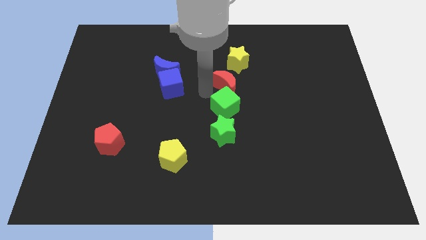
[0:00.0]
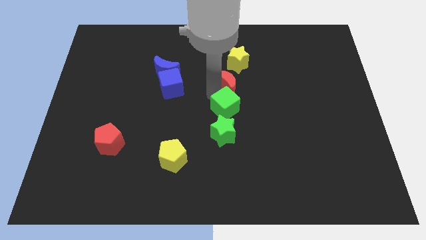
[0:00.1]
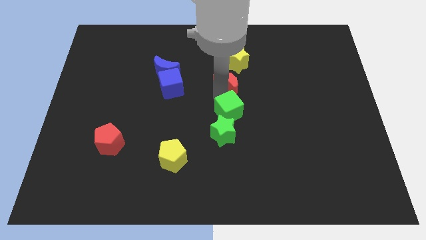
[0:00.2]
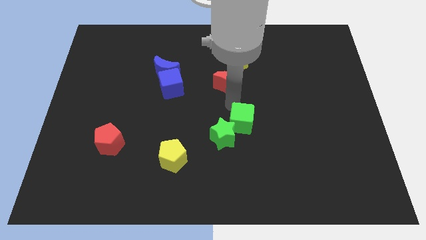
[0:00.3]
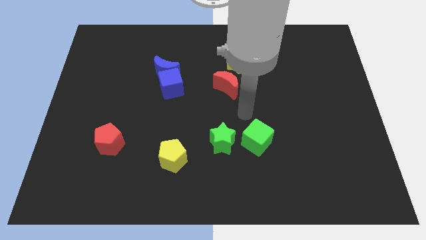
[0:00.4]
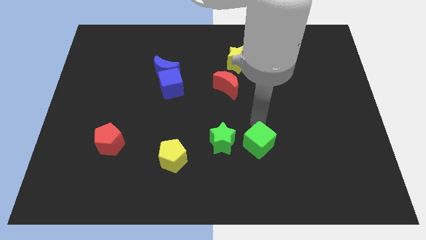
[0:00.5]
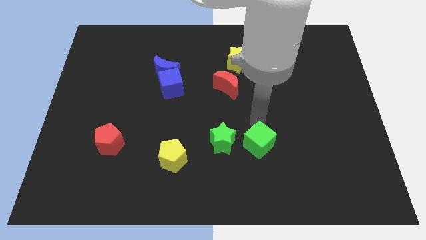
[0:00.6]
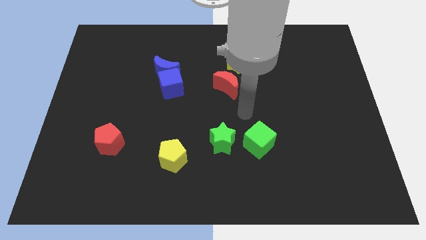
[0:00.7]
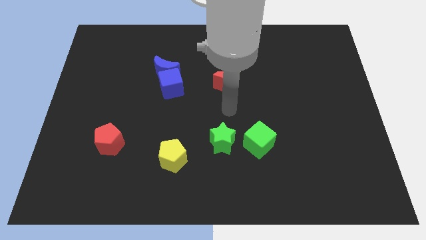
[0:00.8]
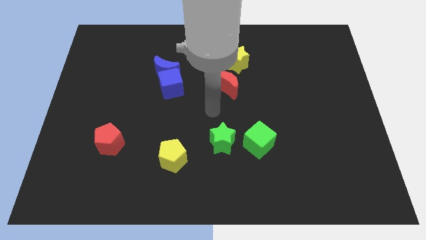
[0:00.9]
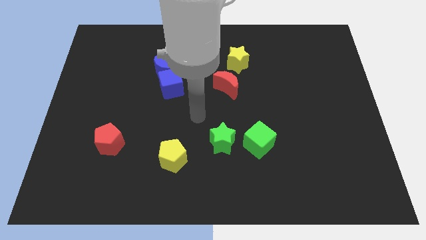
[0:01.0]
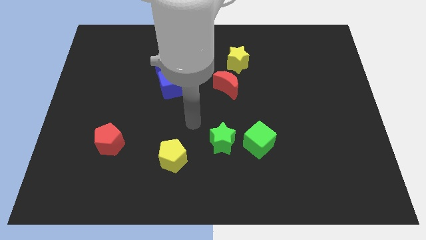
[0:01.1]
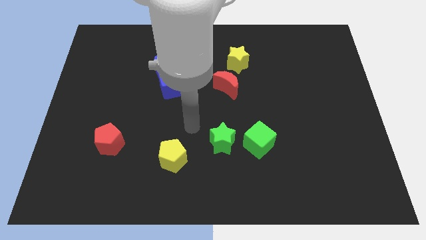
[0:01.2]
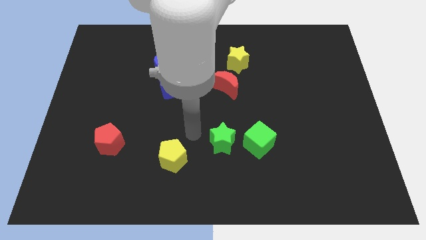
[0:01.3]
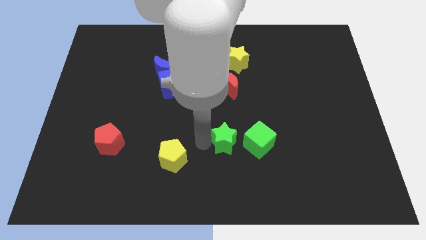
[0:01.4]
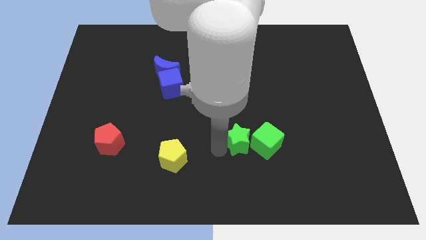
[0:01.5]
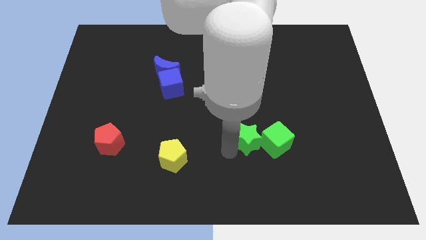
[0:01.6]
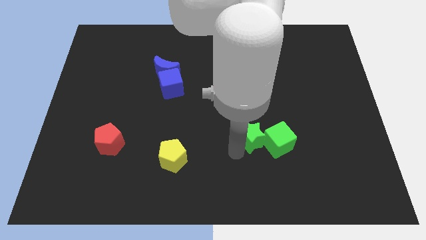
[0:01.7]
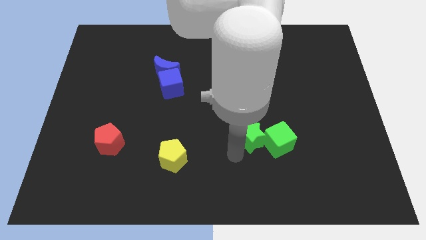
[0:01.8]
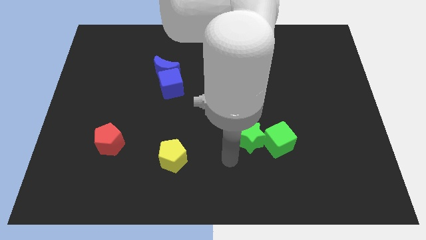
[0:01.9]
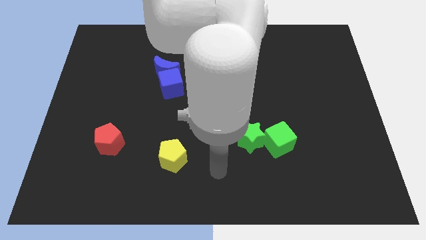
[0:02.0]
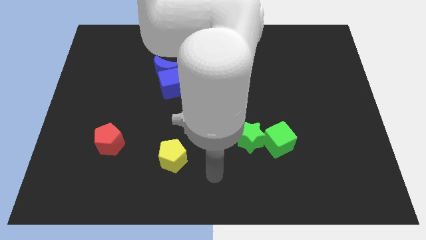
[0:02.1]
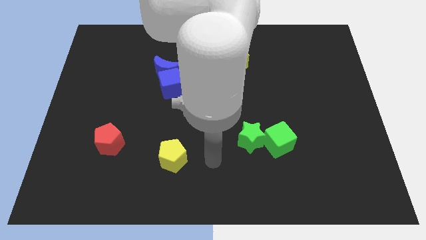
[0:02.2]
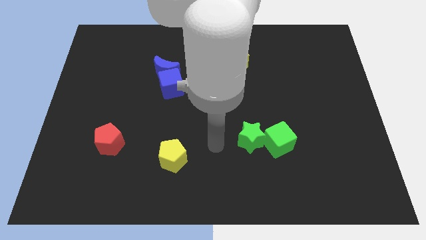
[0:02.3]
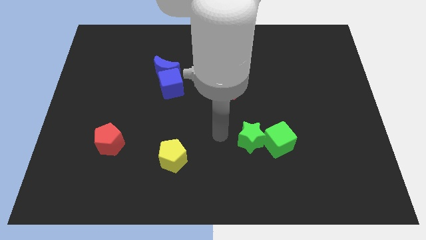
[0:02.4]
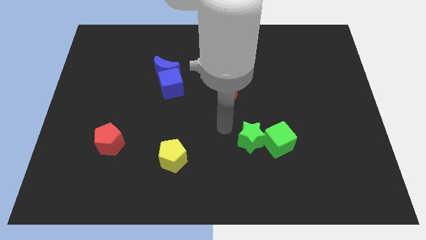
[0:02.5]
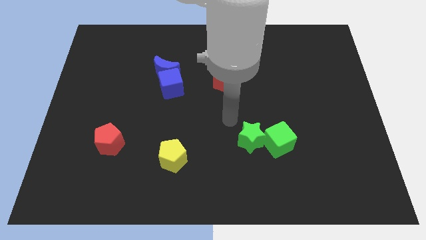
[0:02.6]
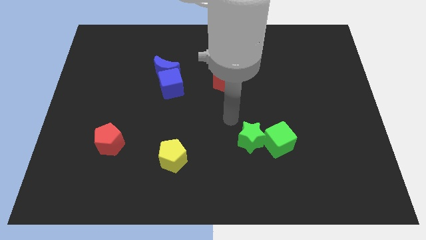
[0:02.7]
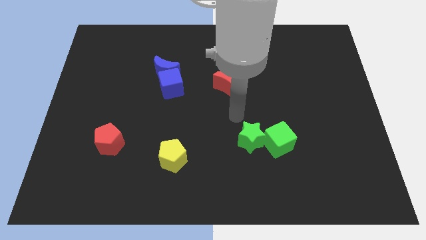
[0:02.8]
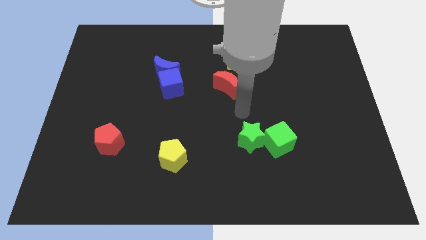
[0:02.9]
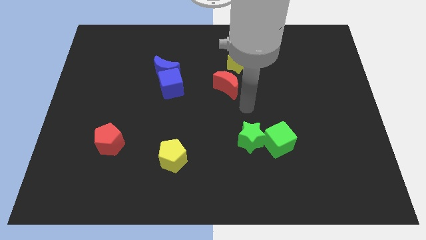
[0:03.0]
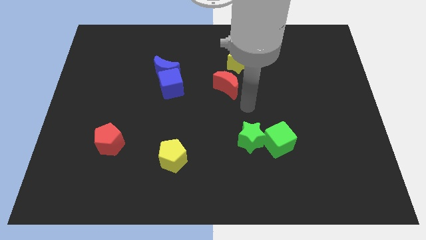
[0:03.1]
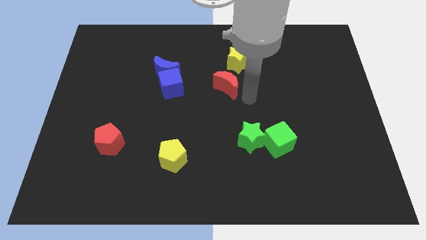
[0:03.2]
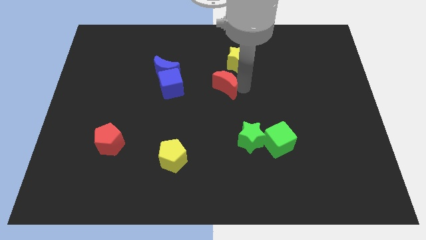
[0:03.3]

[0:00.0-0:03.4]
push both the green blocks slightly to the right side of the board

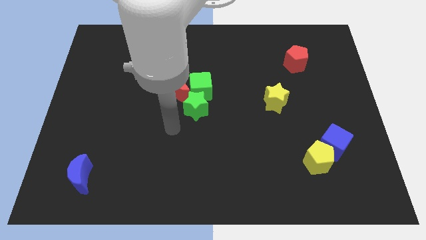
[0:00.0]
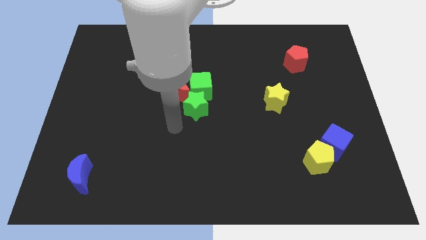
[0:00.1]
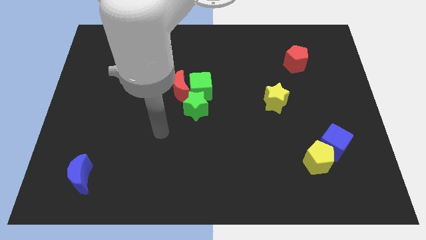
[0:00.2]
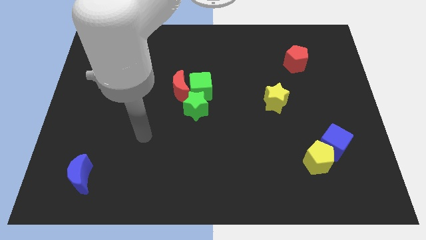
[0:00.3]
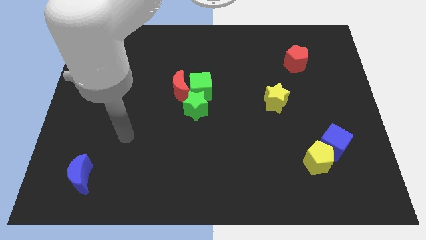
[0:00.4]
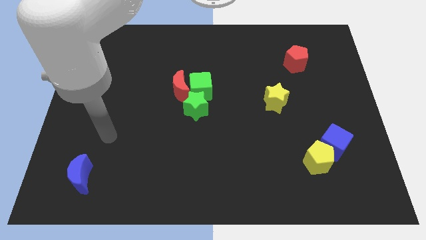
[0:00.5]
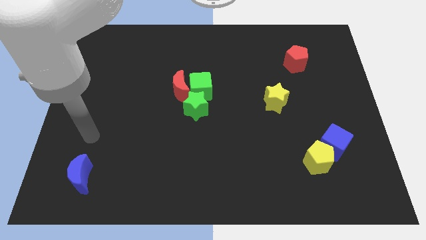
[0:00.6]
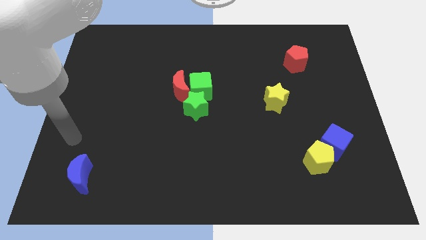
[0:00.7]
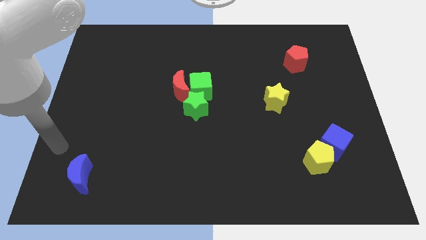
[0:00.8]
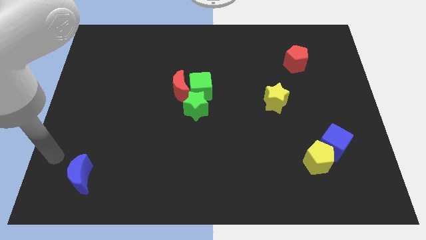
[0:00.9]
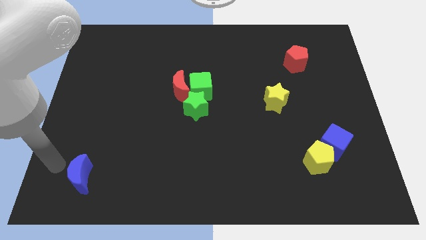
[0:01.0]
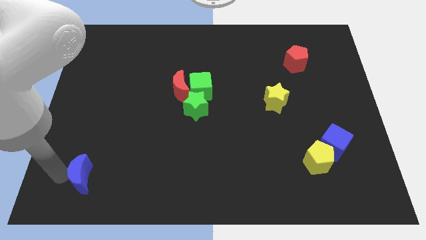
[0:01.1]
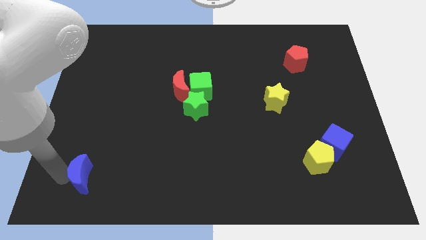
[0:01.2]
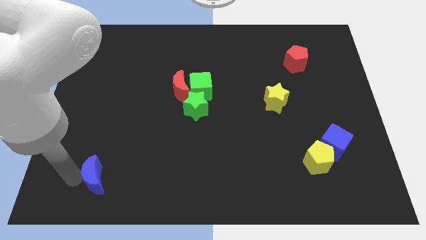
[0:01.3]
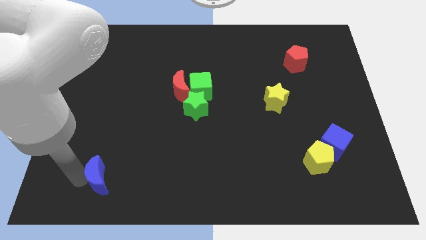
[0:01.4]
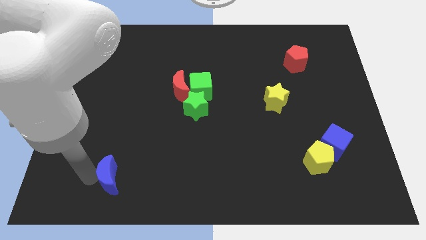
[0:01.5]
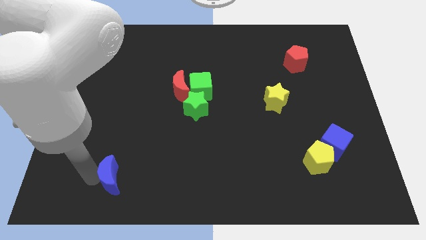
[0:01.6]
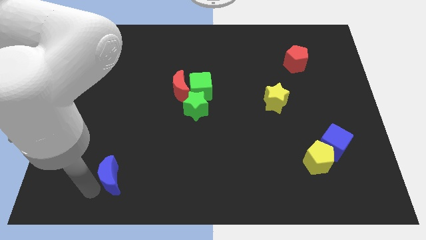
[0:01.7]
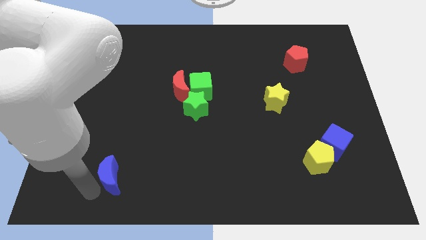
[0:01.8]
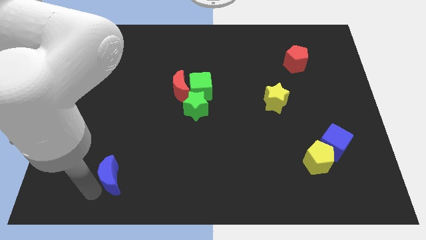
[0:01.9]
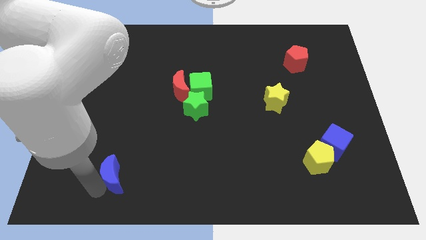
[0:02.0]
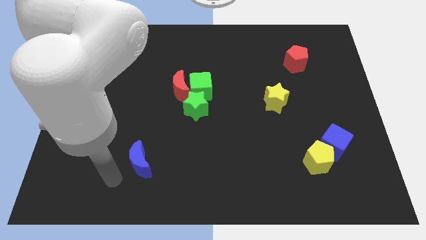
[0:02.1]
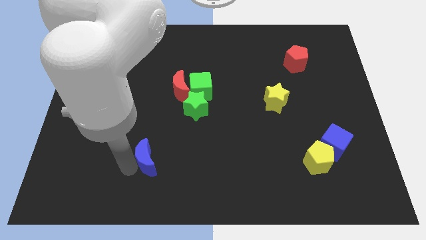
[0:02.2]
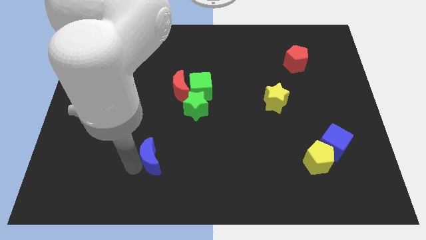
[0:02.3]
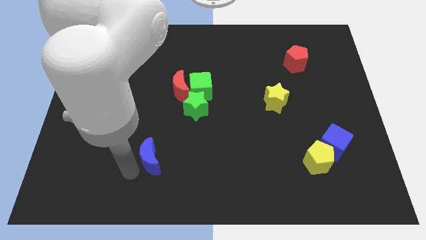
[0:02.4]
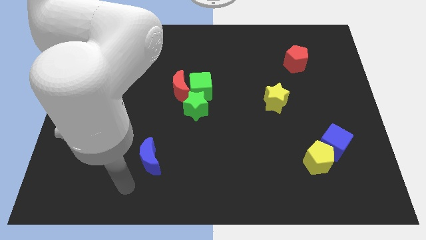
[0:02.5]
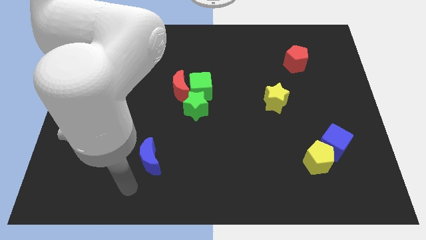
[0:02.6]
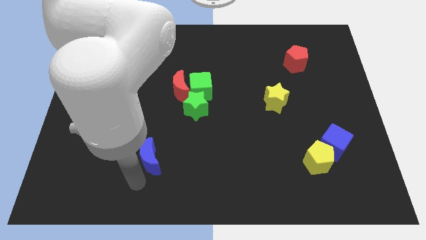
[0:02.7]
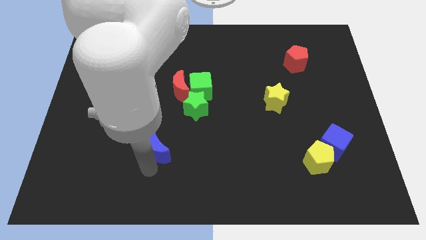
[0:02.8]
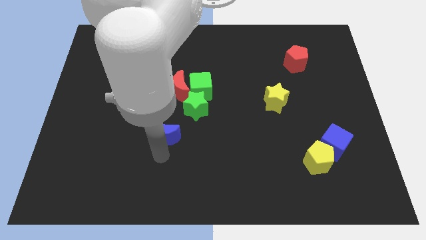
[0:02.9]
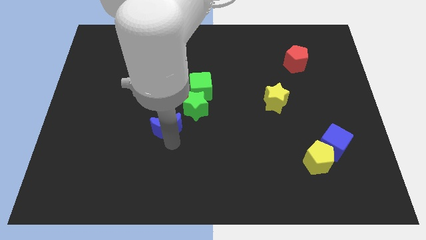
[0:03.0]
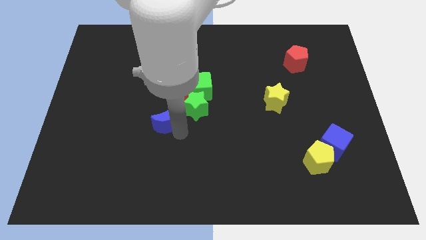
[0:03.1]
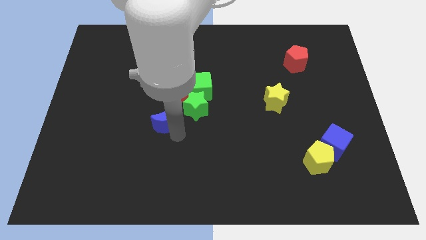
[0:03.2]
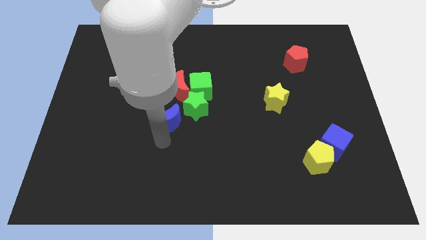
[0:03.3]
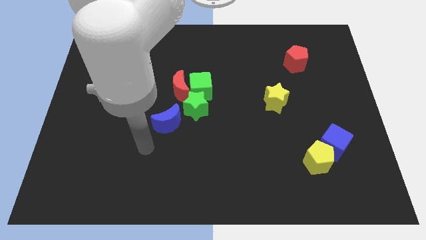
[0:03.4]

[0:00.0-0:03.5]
move the blue moon at the bottom left side of the green star

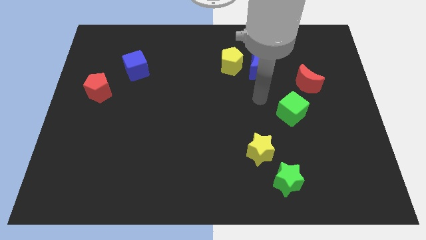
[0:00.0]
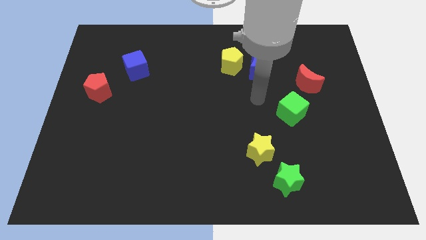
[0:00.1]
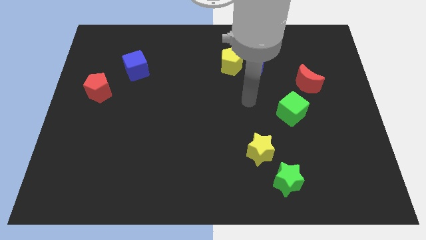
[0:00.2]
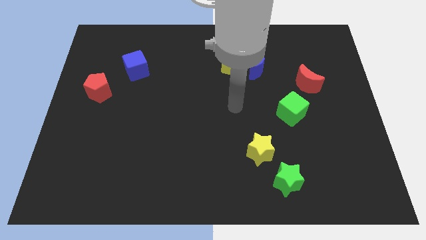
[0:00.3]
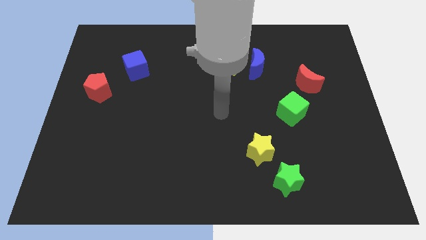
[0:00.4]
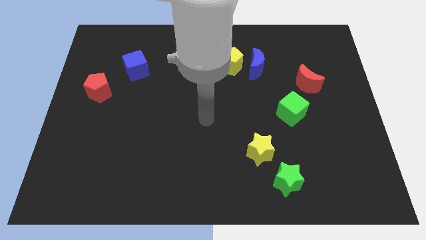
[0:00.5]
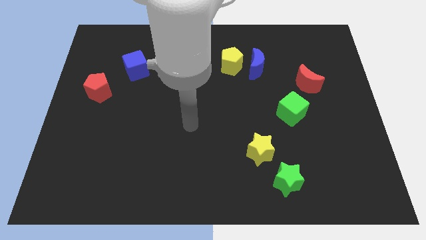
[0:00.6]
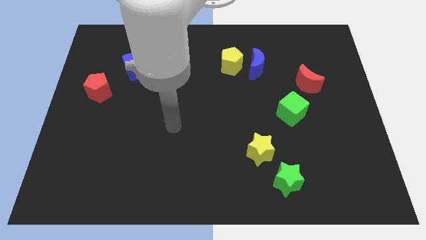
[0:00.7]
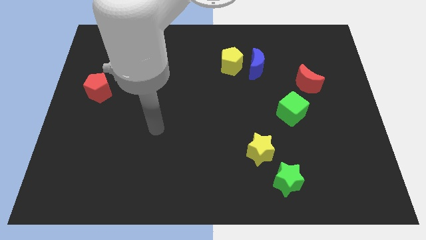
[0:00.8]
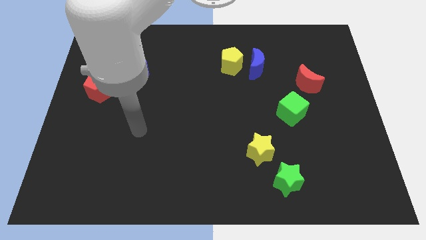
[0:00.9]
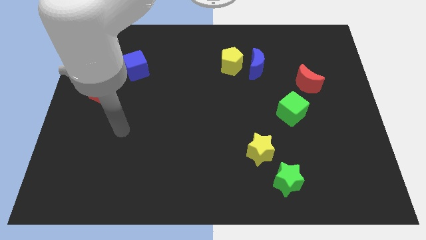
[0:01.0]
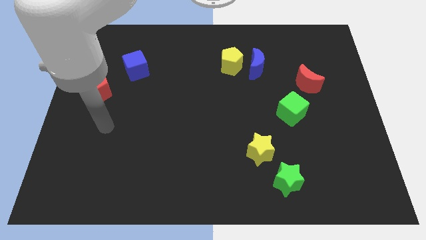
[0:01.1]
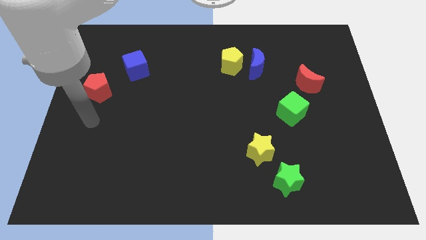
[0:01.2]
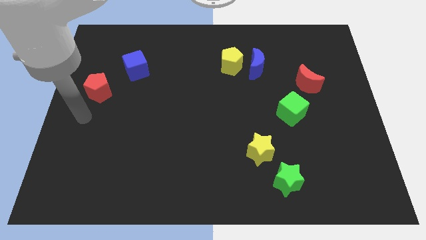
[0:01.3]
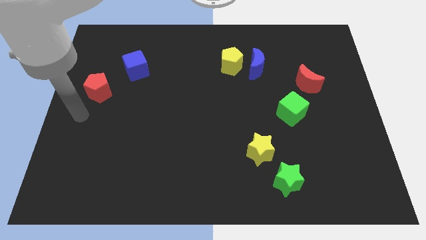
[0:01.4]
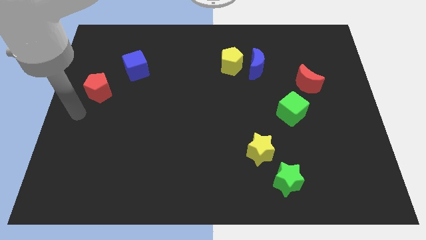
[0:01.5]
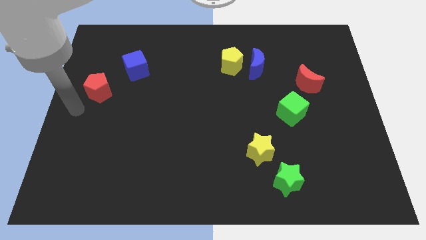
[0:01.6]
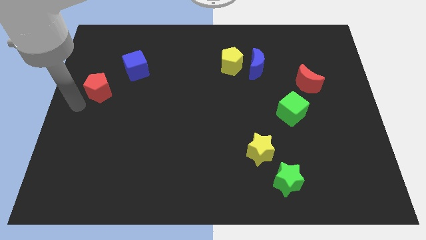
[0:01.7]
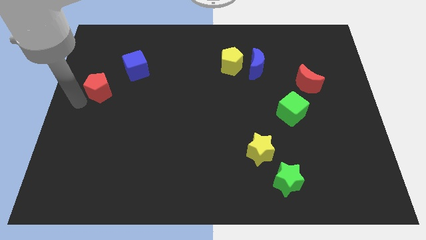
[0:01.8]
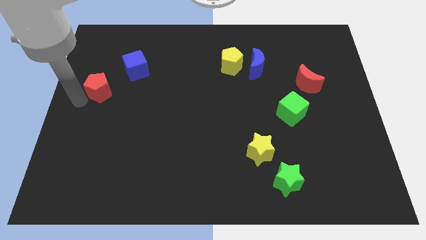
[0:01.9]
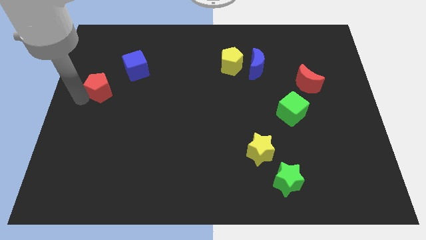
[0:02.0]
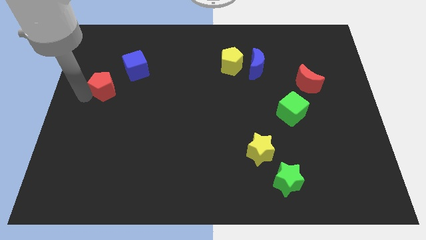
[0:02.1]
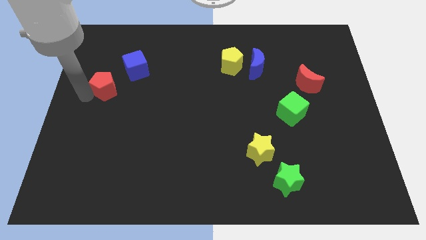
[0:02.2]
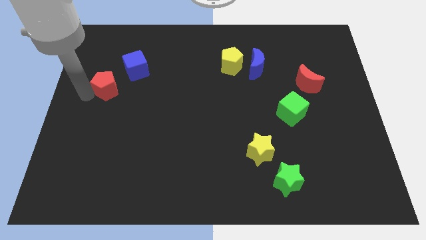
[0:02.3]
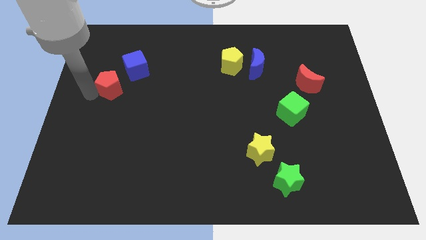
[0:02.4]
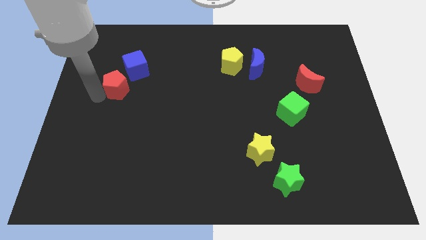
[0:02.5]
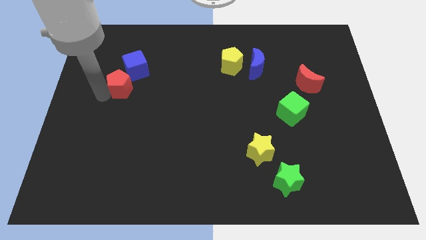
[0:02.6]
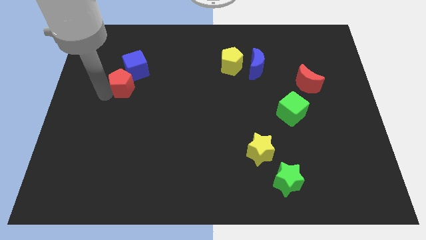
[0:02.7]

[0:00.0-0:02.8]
push the red pentagon below the blue cube
